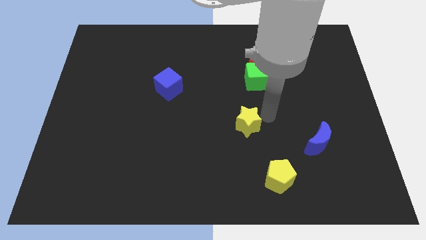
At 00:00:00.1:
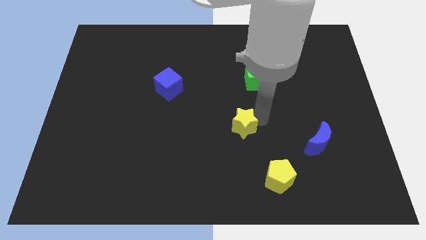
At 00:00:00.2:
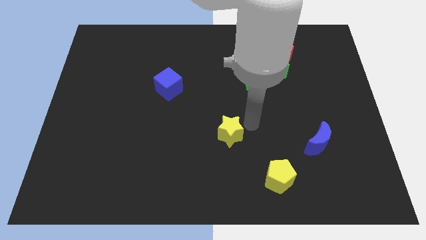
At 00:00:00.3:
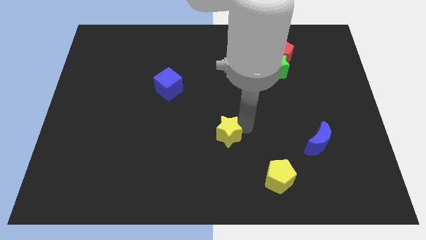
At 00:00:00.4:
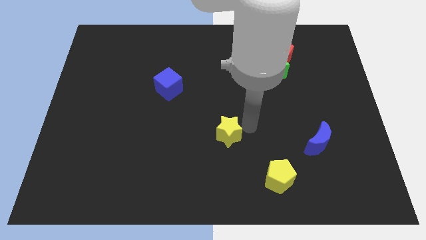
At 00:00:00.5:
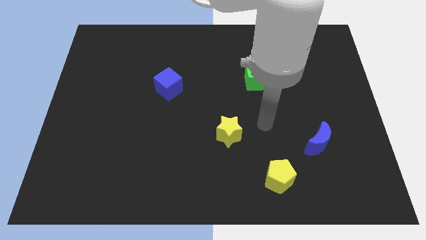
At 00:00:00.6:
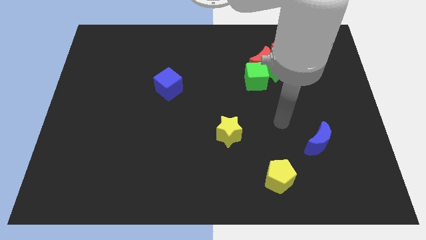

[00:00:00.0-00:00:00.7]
slightly push the yellow star towards the center of the board

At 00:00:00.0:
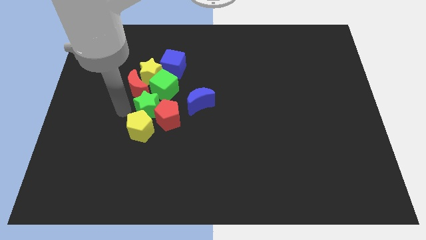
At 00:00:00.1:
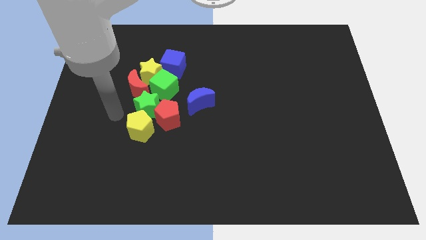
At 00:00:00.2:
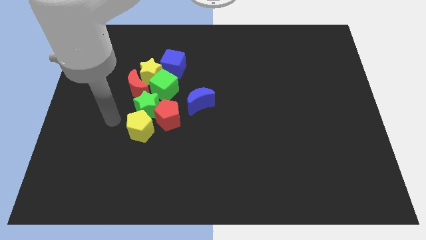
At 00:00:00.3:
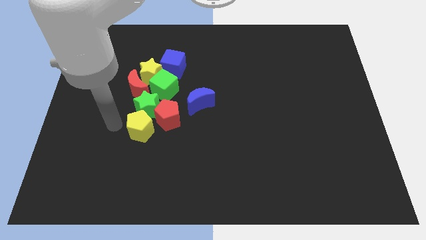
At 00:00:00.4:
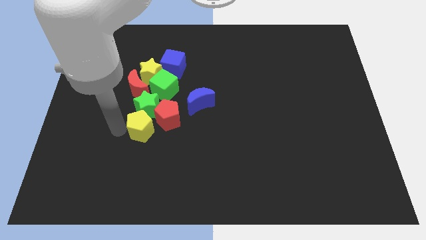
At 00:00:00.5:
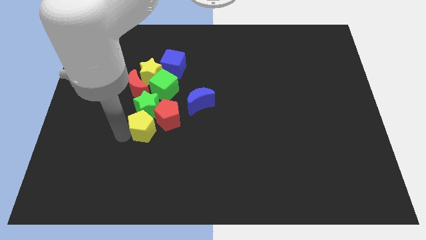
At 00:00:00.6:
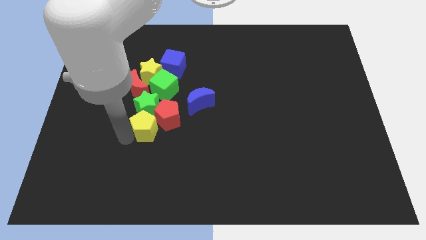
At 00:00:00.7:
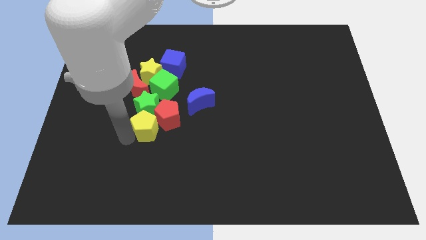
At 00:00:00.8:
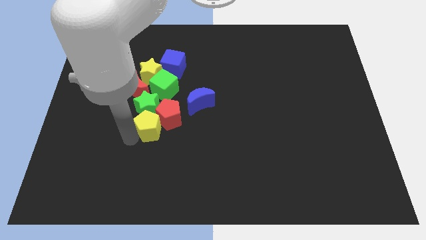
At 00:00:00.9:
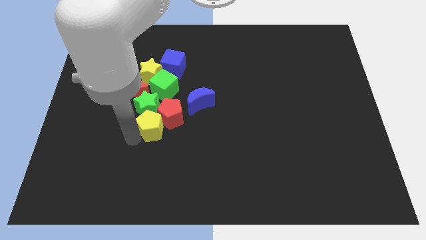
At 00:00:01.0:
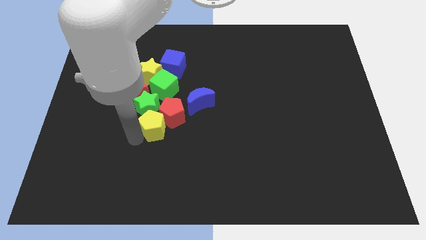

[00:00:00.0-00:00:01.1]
push the yellow pentagon into the red pentagon

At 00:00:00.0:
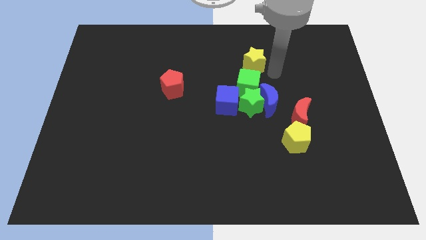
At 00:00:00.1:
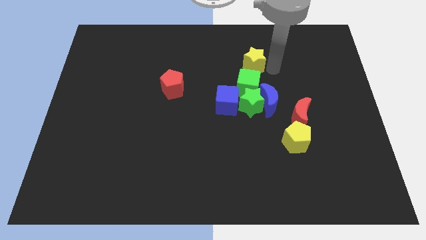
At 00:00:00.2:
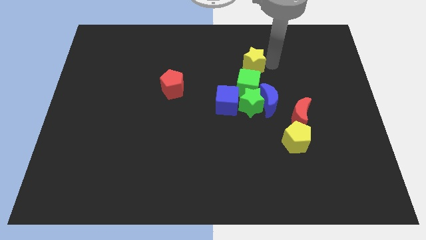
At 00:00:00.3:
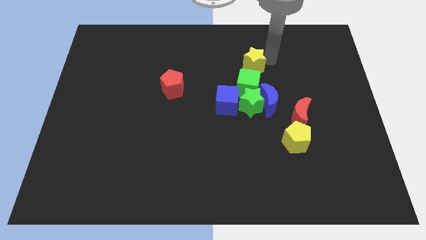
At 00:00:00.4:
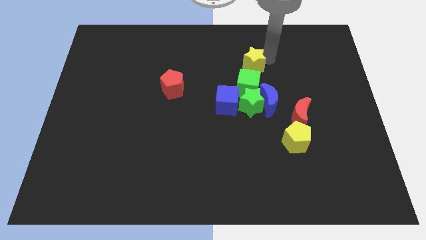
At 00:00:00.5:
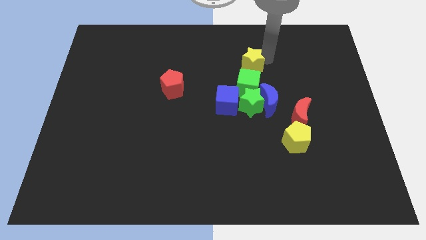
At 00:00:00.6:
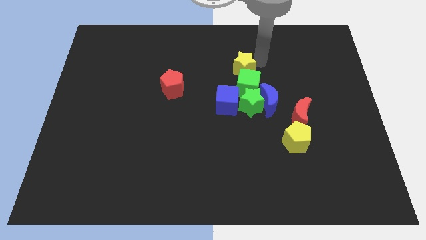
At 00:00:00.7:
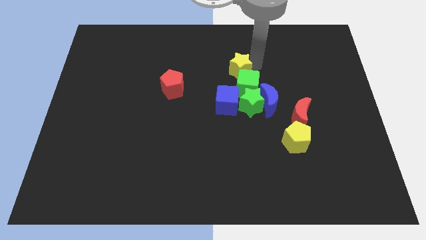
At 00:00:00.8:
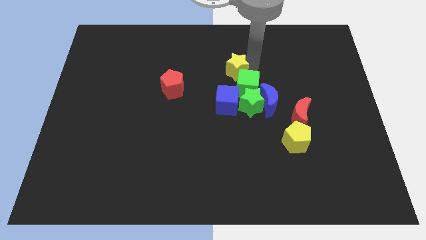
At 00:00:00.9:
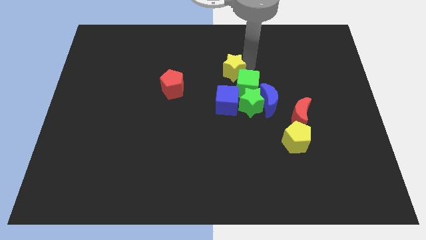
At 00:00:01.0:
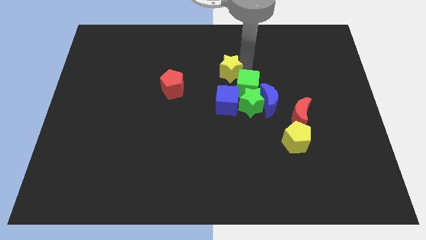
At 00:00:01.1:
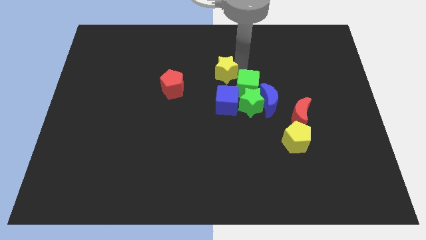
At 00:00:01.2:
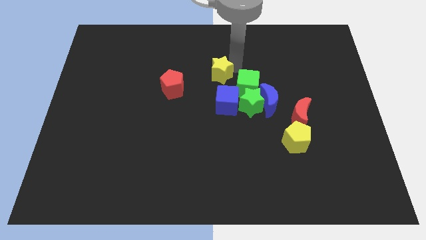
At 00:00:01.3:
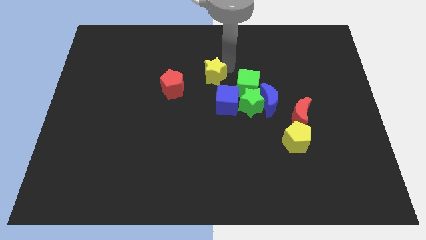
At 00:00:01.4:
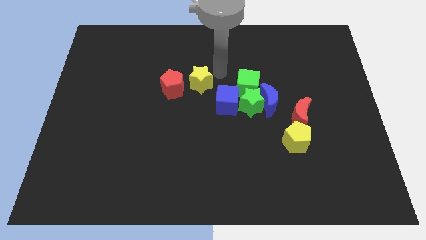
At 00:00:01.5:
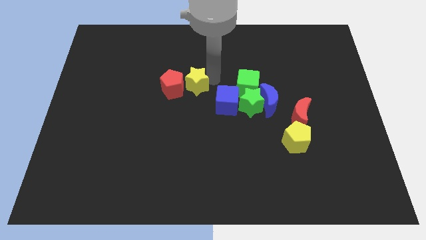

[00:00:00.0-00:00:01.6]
slide the yellow star parallel left side of the green cube

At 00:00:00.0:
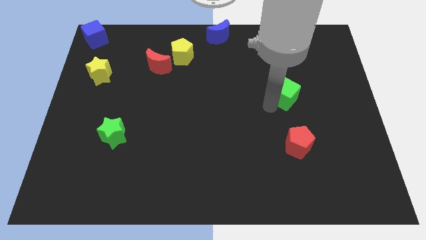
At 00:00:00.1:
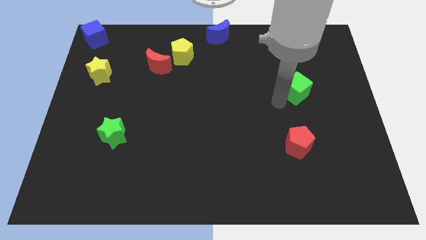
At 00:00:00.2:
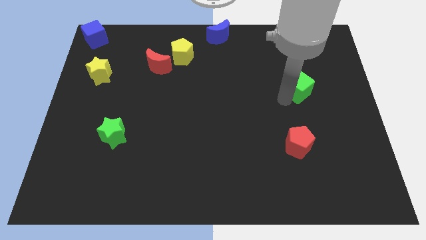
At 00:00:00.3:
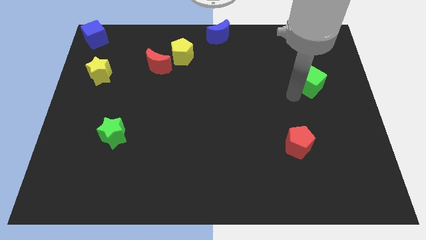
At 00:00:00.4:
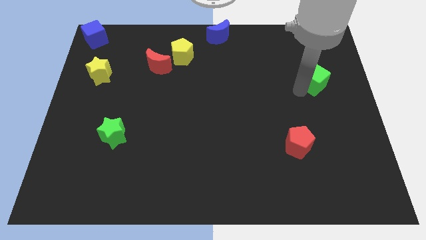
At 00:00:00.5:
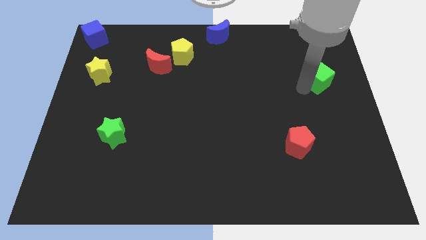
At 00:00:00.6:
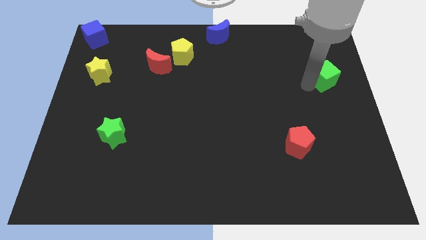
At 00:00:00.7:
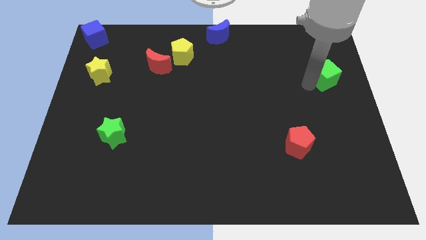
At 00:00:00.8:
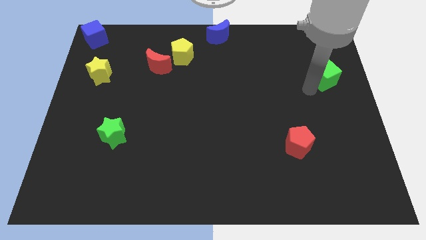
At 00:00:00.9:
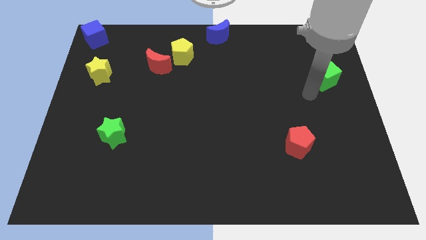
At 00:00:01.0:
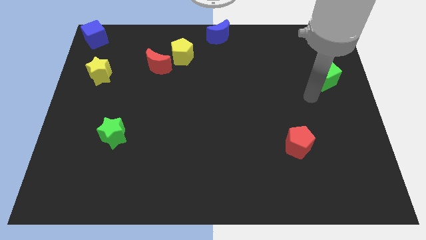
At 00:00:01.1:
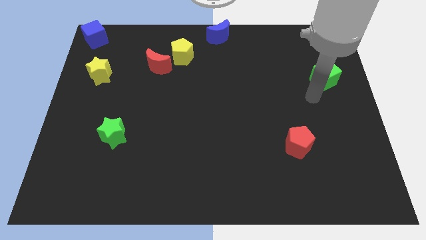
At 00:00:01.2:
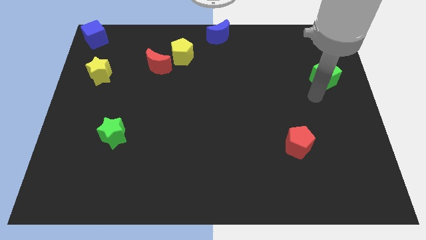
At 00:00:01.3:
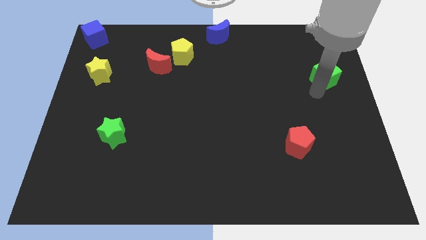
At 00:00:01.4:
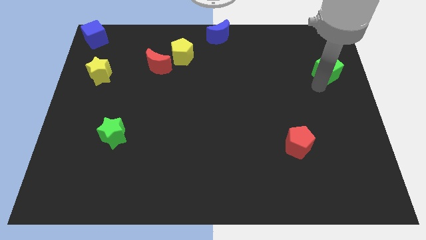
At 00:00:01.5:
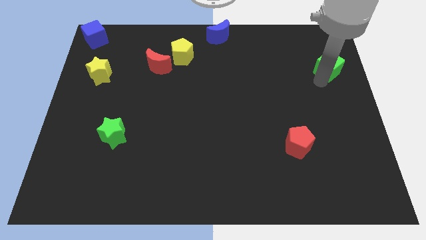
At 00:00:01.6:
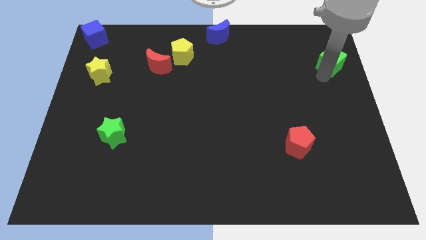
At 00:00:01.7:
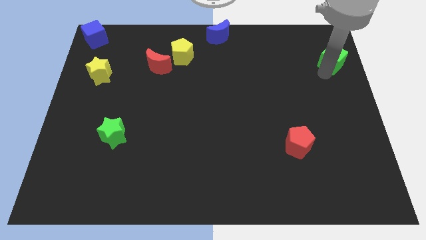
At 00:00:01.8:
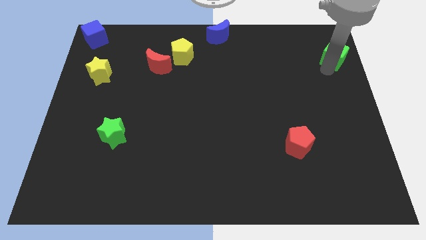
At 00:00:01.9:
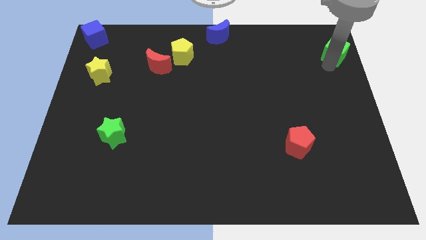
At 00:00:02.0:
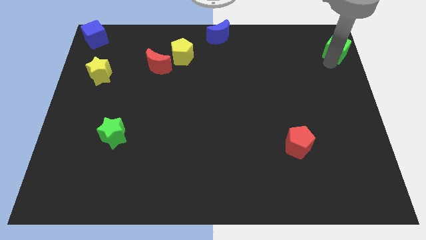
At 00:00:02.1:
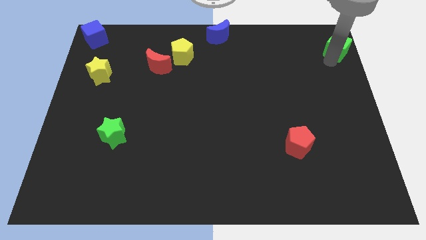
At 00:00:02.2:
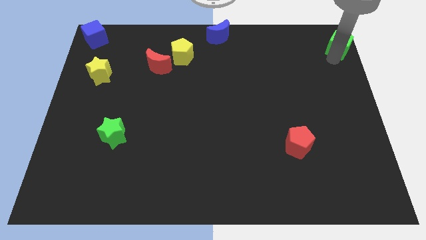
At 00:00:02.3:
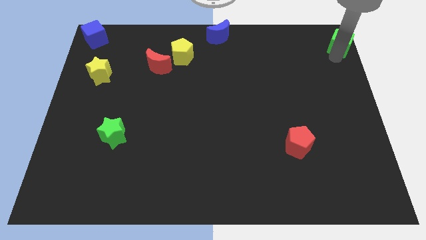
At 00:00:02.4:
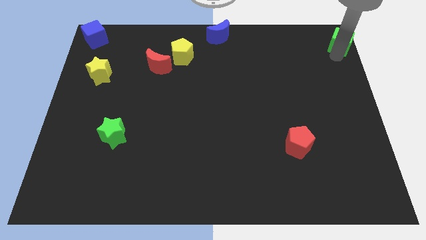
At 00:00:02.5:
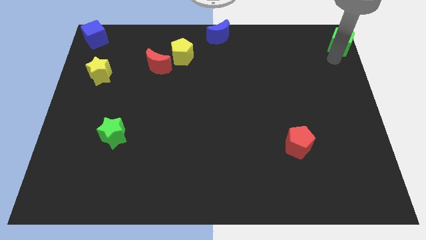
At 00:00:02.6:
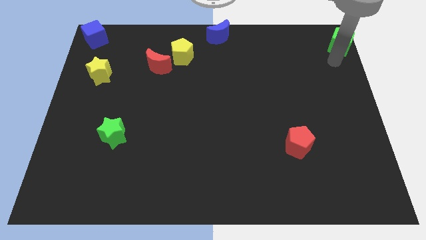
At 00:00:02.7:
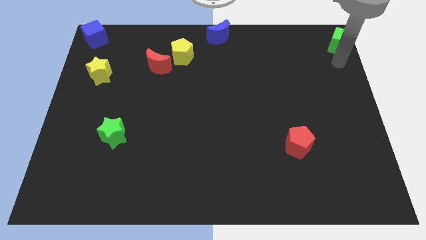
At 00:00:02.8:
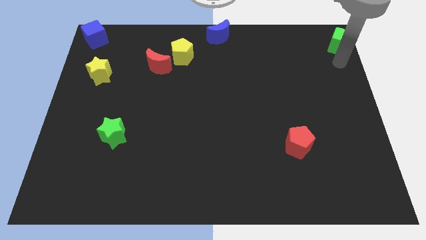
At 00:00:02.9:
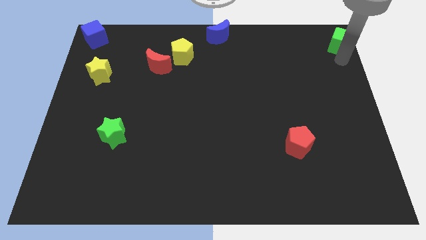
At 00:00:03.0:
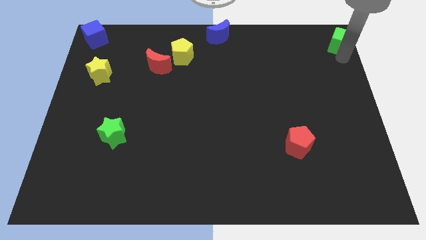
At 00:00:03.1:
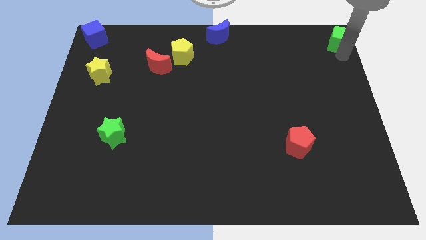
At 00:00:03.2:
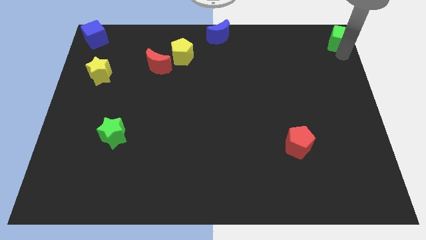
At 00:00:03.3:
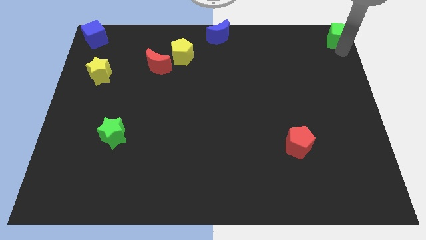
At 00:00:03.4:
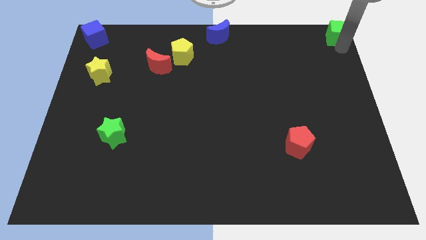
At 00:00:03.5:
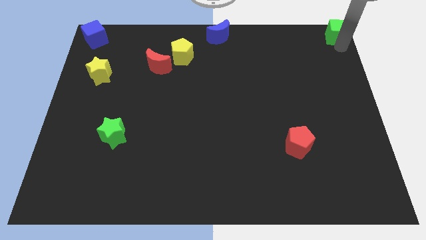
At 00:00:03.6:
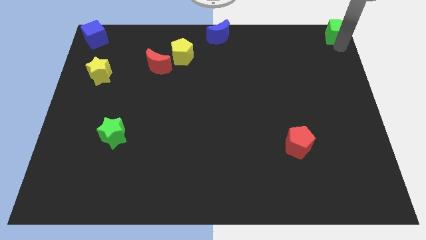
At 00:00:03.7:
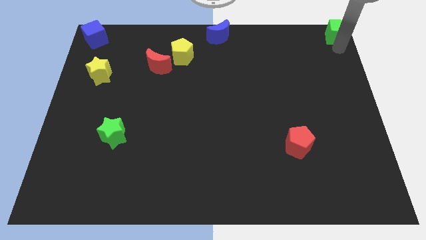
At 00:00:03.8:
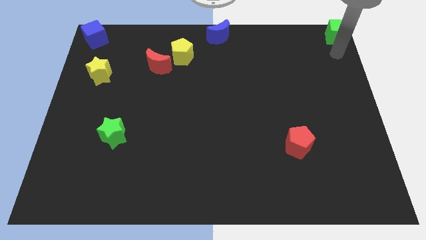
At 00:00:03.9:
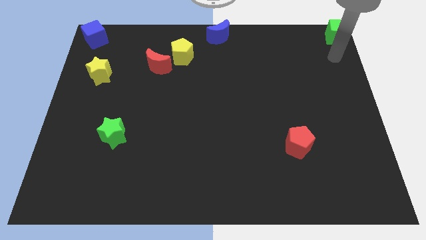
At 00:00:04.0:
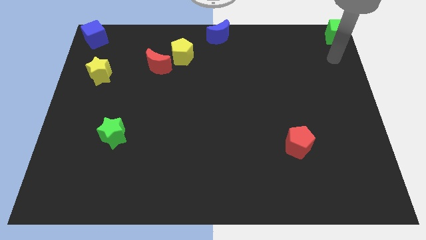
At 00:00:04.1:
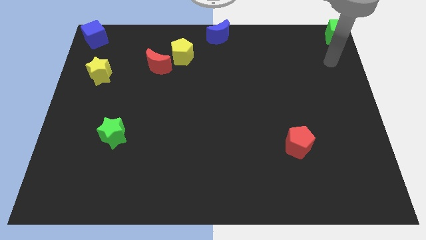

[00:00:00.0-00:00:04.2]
place the green cube on the top right of the board

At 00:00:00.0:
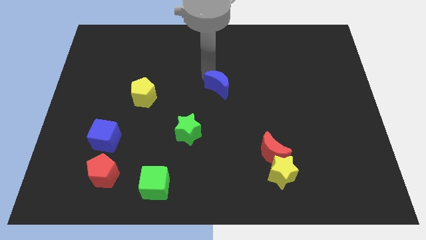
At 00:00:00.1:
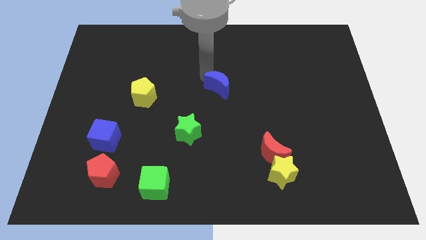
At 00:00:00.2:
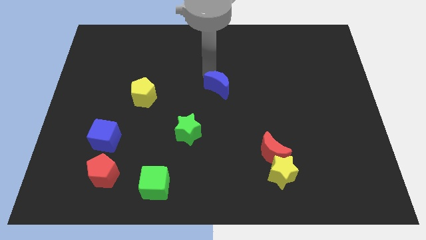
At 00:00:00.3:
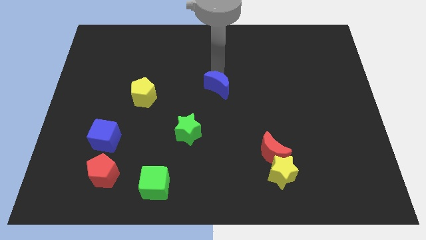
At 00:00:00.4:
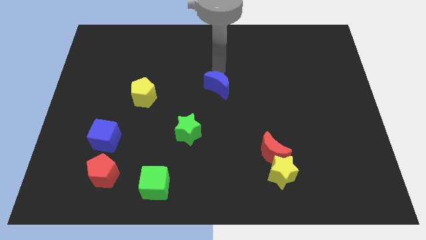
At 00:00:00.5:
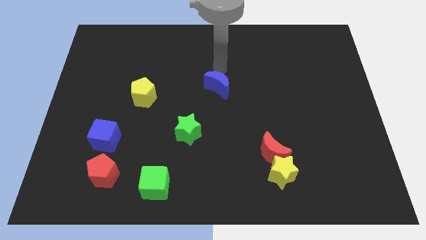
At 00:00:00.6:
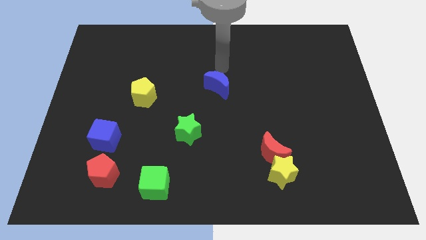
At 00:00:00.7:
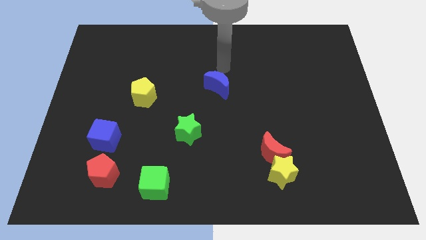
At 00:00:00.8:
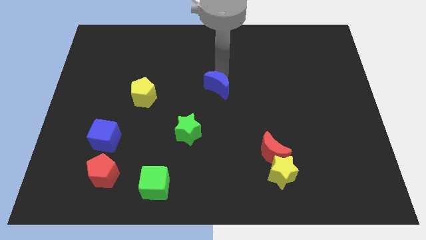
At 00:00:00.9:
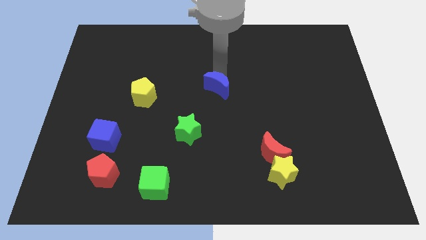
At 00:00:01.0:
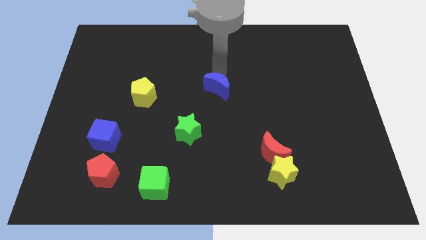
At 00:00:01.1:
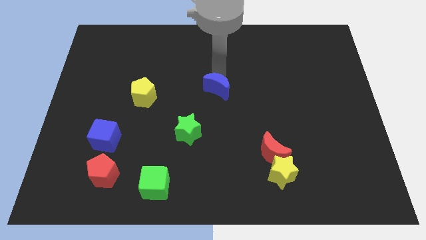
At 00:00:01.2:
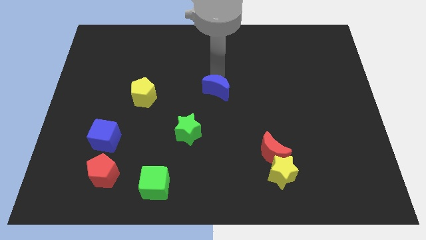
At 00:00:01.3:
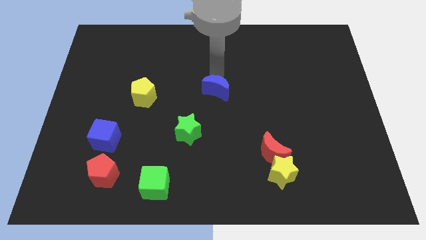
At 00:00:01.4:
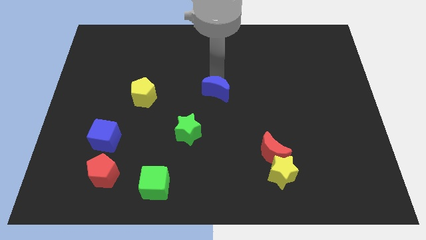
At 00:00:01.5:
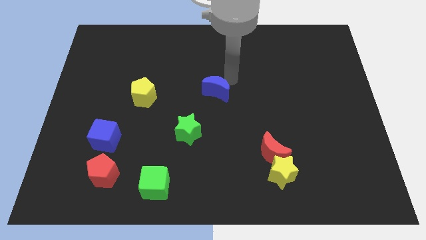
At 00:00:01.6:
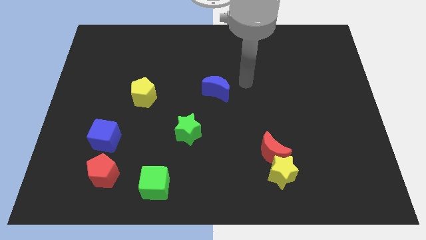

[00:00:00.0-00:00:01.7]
place the blue moon at the center of the board
